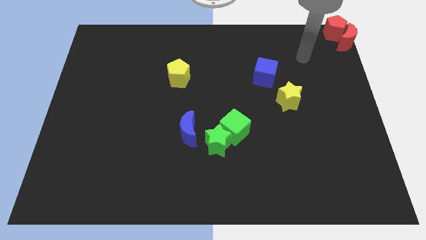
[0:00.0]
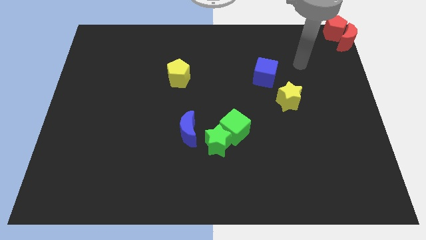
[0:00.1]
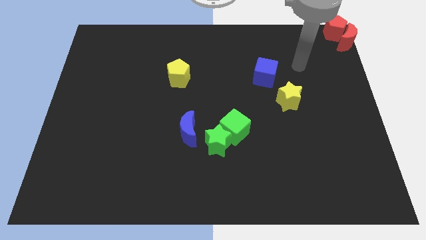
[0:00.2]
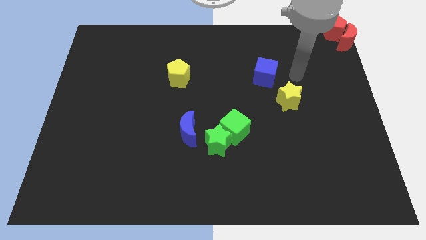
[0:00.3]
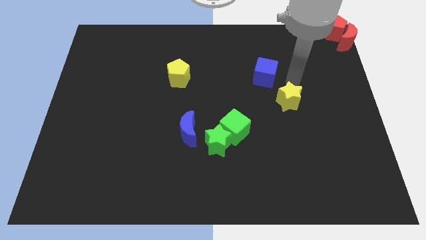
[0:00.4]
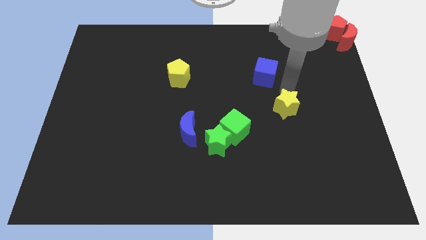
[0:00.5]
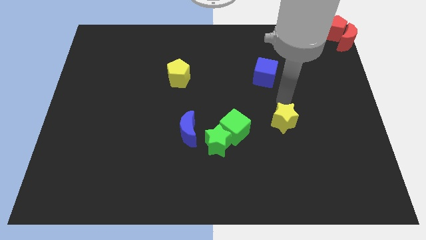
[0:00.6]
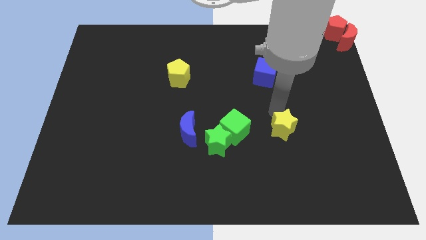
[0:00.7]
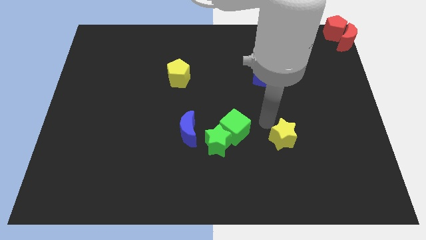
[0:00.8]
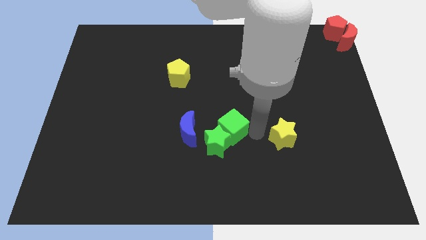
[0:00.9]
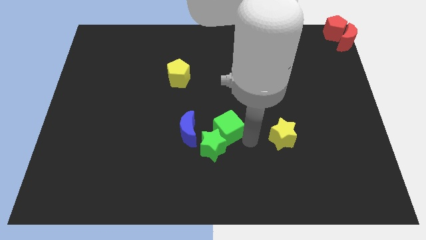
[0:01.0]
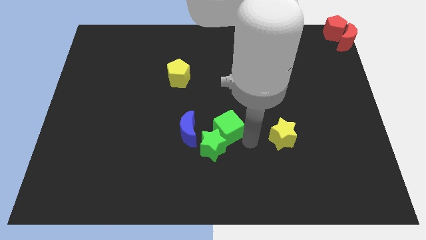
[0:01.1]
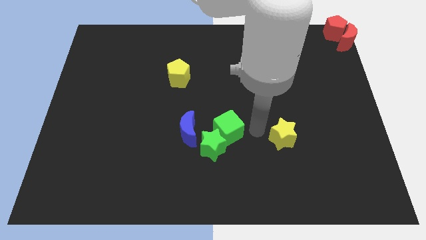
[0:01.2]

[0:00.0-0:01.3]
slide the yellow star to the right side of the green cube

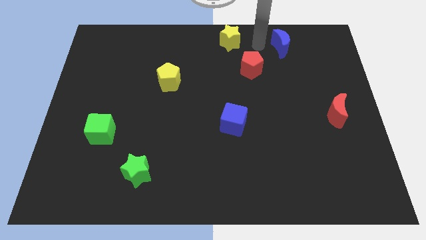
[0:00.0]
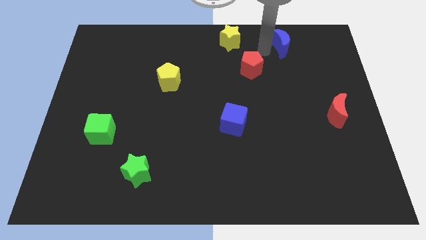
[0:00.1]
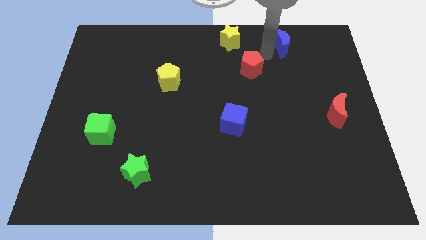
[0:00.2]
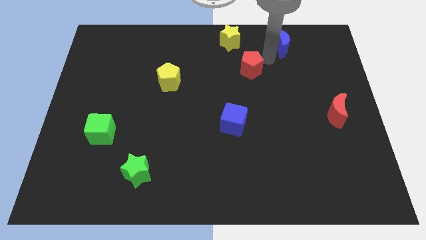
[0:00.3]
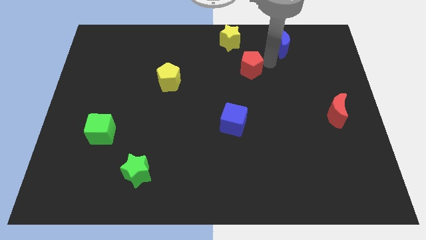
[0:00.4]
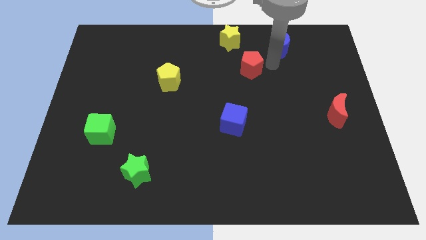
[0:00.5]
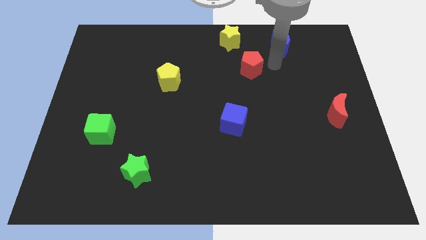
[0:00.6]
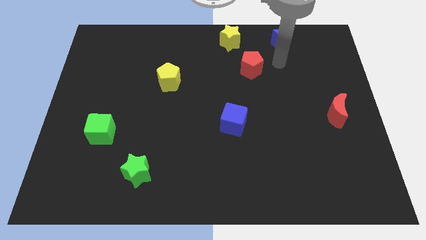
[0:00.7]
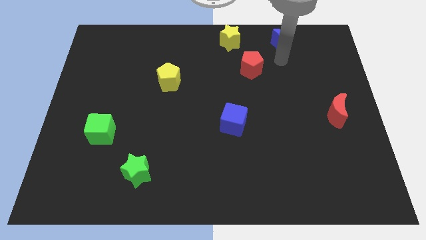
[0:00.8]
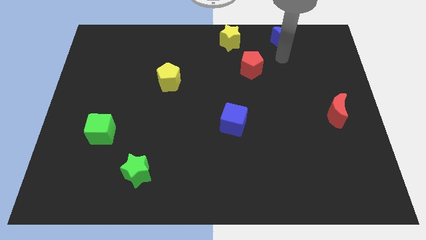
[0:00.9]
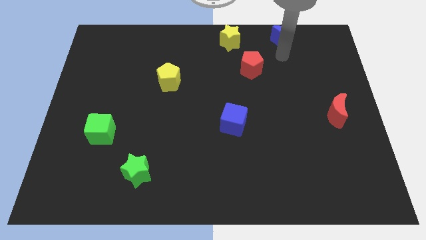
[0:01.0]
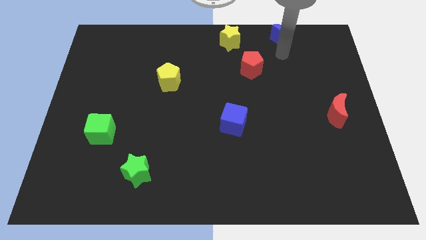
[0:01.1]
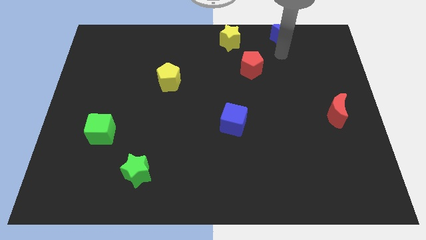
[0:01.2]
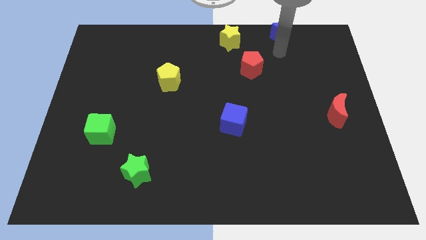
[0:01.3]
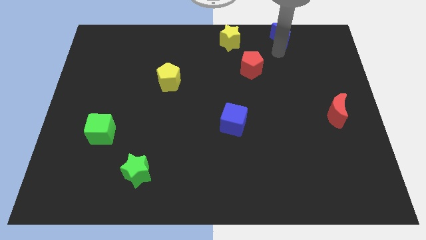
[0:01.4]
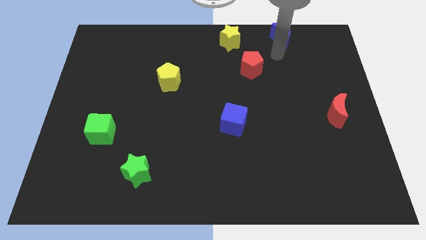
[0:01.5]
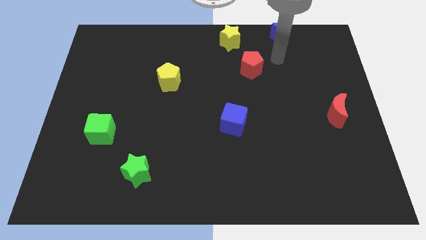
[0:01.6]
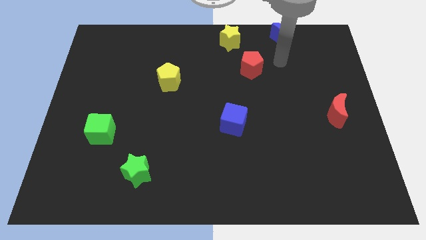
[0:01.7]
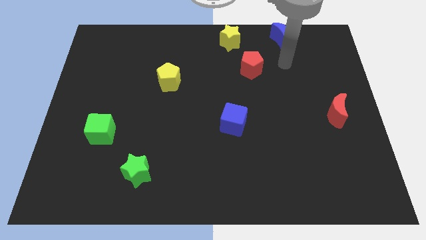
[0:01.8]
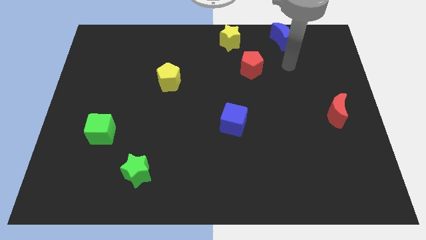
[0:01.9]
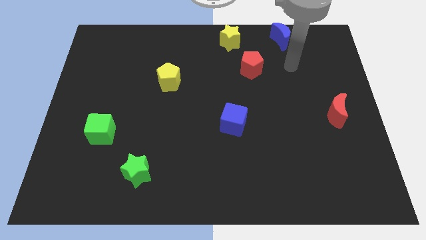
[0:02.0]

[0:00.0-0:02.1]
push the blue moon to the right of the yellow star

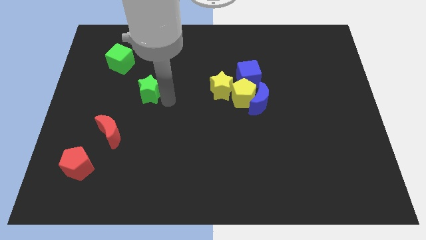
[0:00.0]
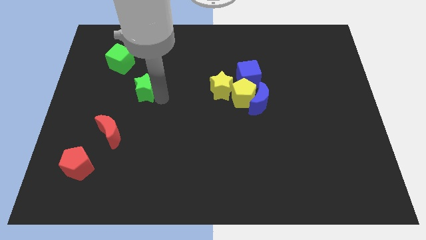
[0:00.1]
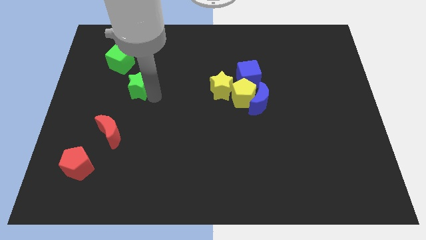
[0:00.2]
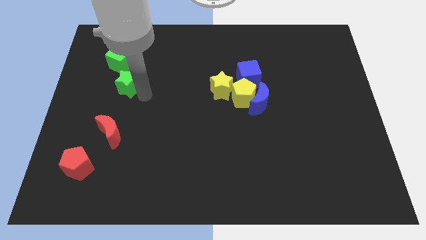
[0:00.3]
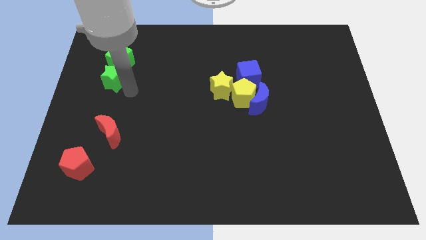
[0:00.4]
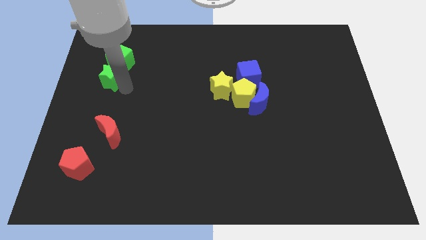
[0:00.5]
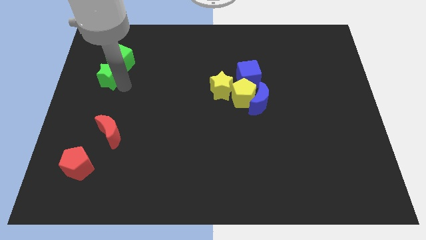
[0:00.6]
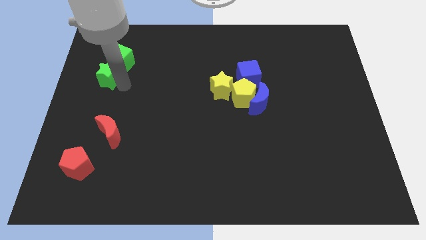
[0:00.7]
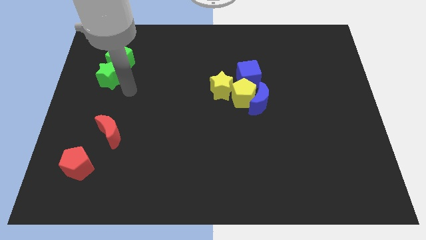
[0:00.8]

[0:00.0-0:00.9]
place the green star below the green cube

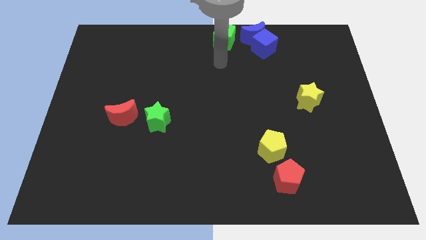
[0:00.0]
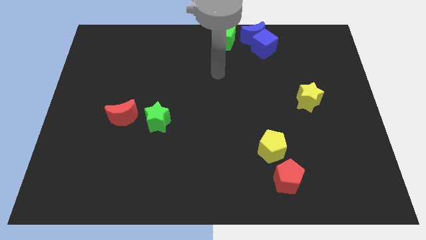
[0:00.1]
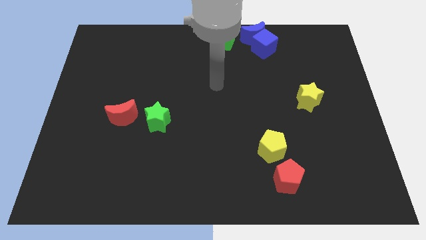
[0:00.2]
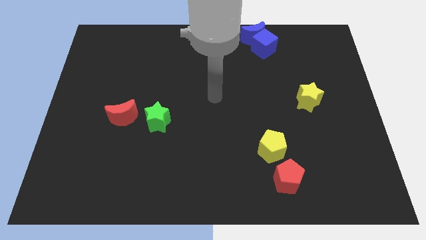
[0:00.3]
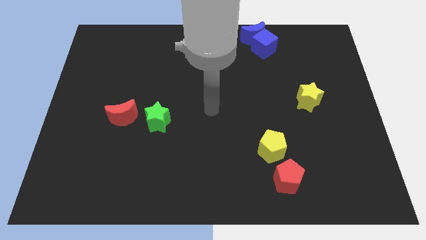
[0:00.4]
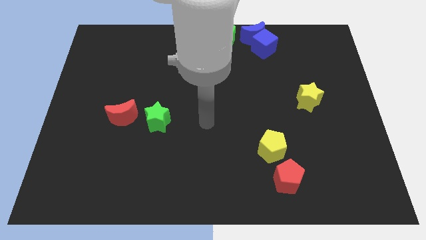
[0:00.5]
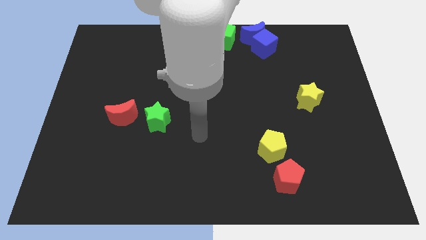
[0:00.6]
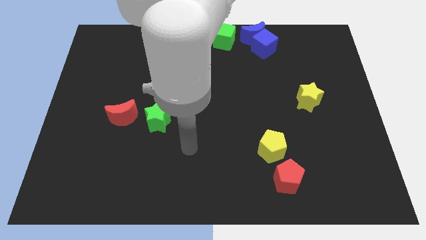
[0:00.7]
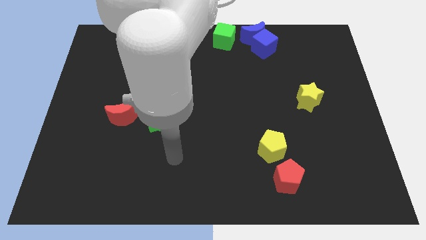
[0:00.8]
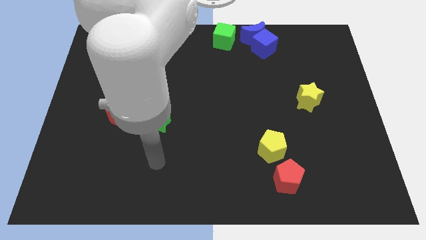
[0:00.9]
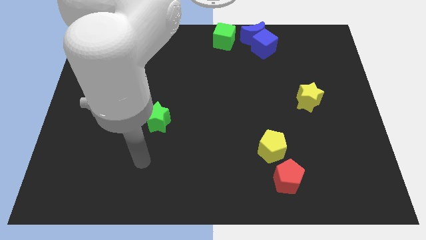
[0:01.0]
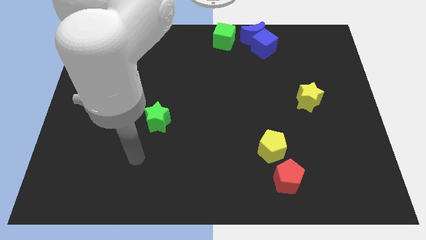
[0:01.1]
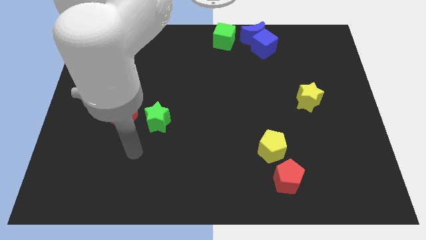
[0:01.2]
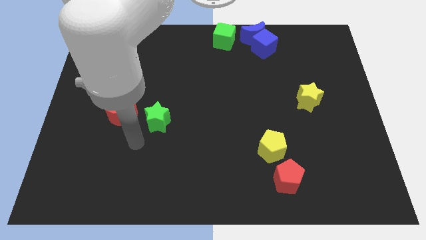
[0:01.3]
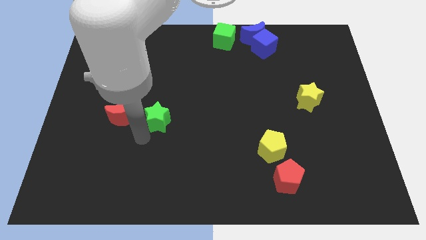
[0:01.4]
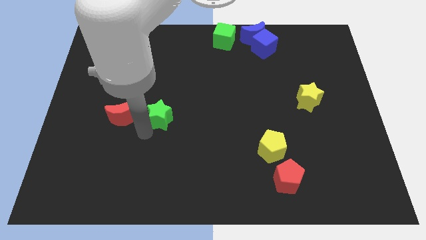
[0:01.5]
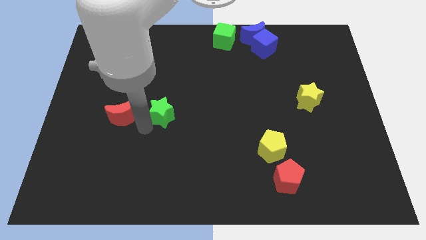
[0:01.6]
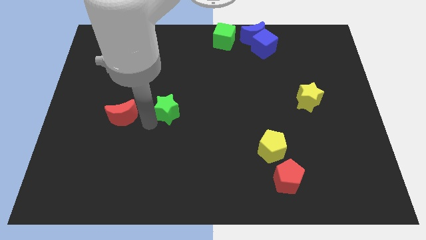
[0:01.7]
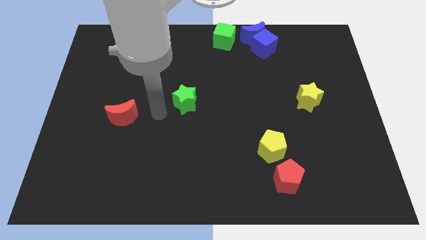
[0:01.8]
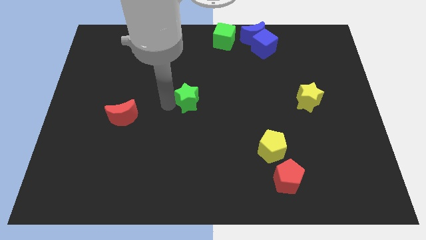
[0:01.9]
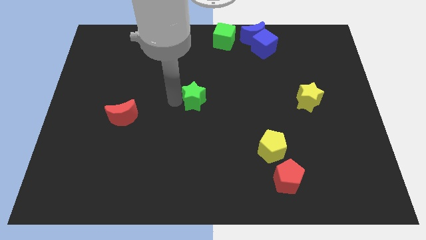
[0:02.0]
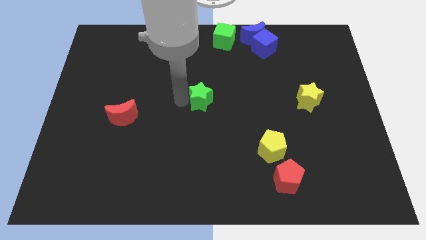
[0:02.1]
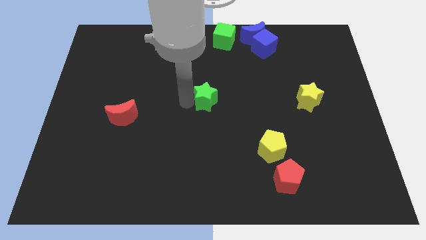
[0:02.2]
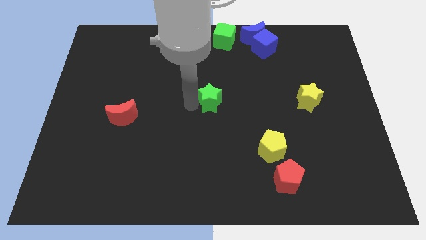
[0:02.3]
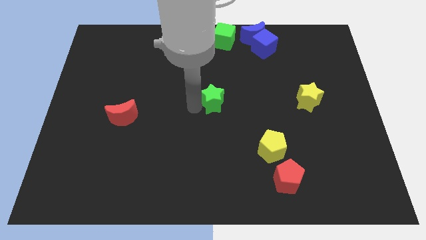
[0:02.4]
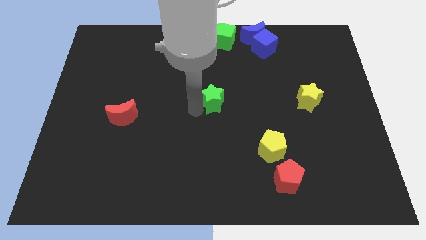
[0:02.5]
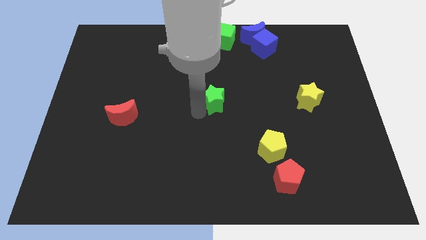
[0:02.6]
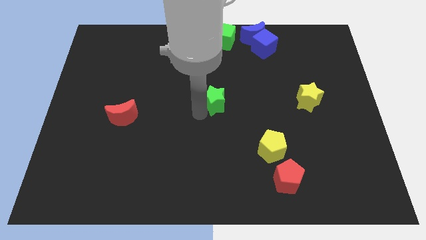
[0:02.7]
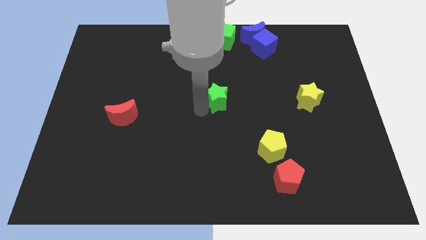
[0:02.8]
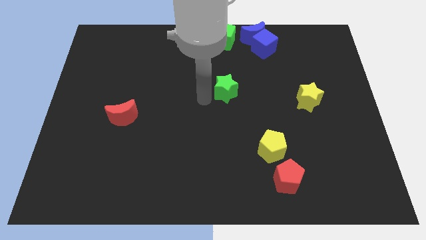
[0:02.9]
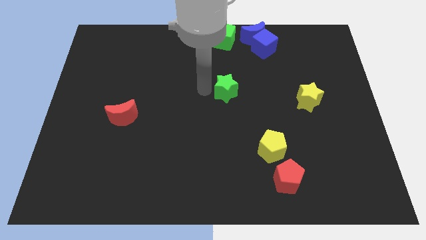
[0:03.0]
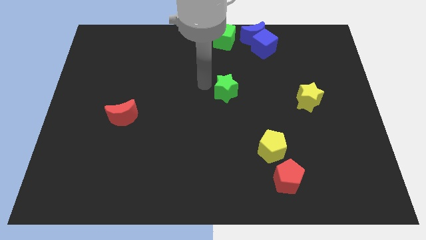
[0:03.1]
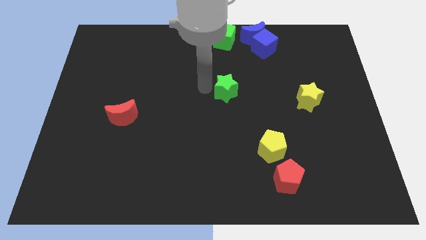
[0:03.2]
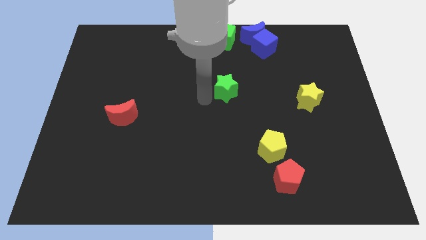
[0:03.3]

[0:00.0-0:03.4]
place the green star vertically under the green cube

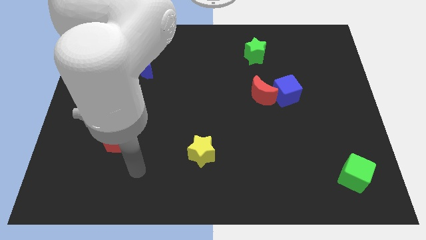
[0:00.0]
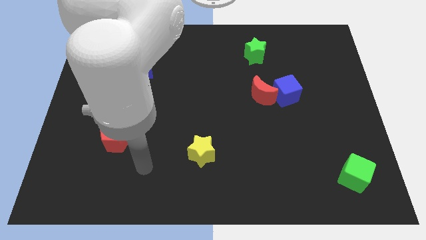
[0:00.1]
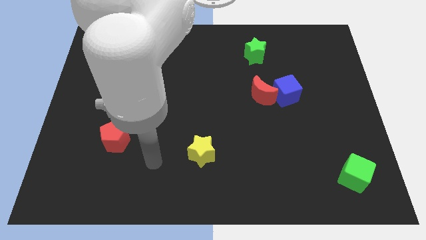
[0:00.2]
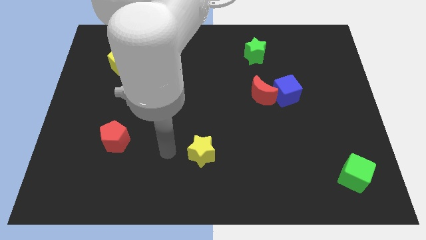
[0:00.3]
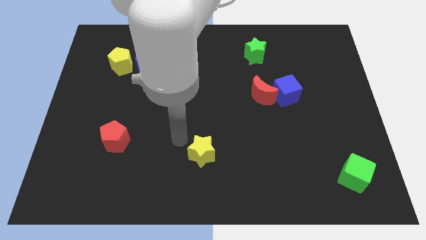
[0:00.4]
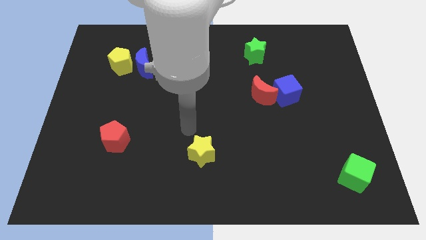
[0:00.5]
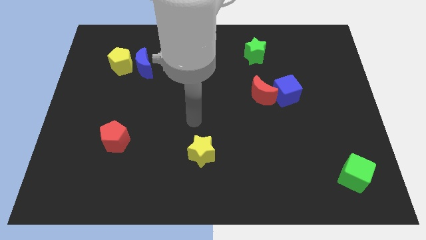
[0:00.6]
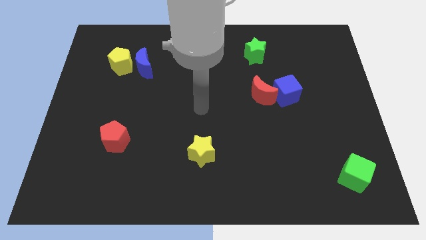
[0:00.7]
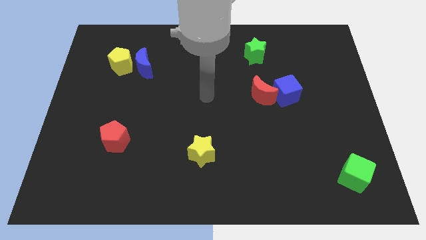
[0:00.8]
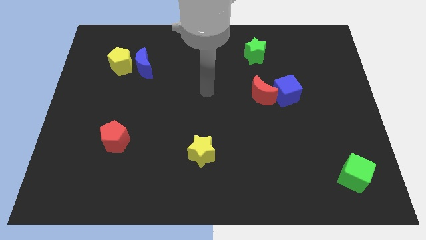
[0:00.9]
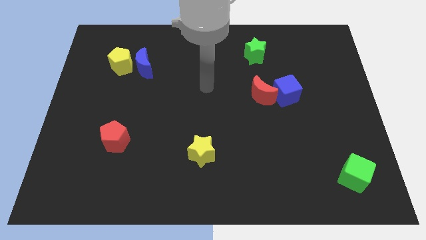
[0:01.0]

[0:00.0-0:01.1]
move your arm to the center of the board

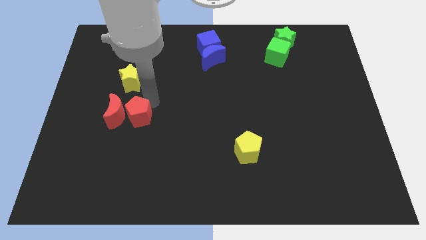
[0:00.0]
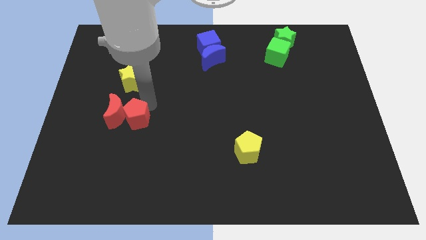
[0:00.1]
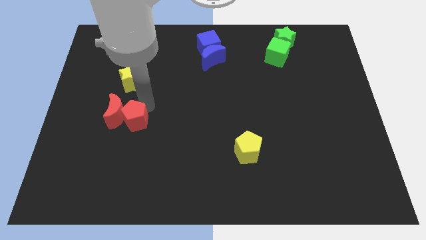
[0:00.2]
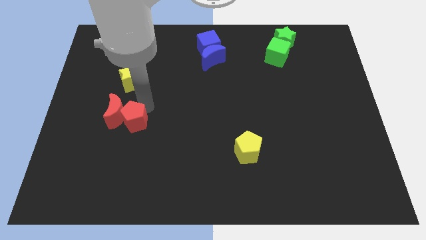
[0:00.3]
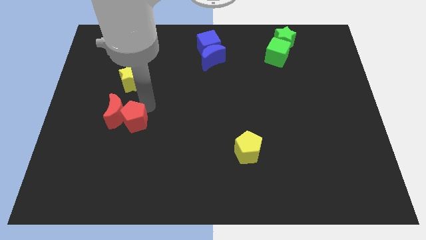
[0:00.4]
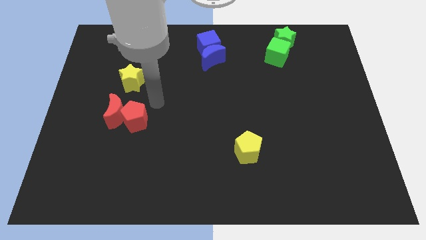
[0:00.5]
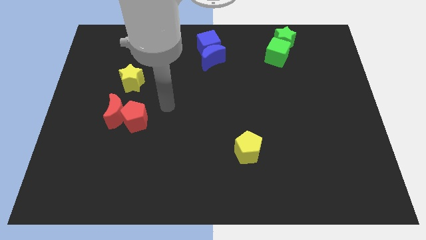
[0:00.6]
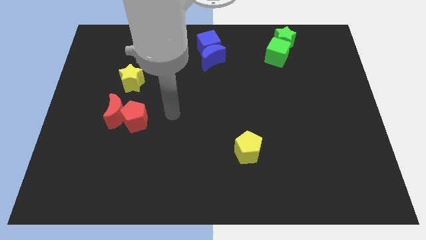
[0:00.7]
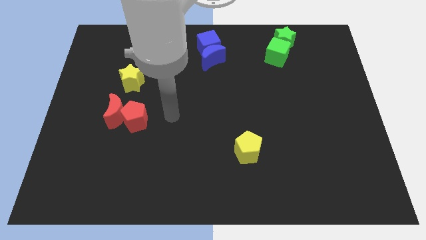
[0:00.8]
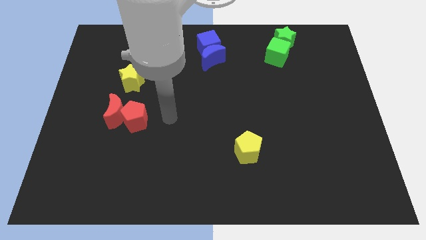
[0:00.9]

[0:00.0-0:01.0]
adjust the red pentagon right to red moon
